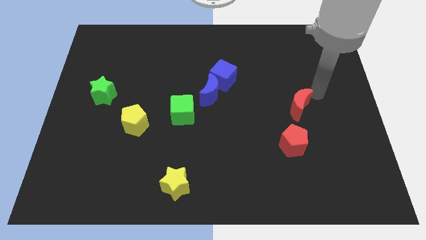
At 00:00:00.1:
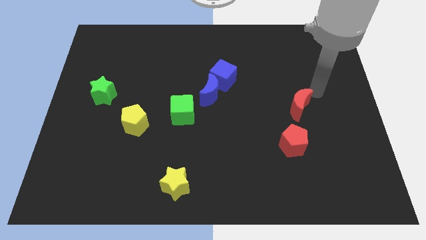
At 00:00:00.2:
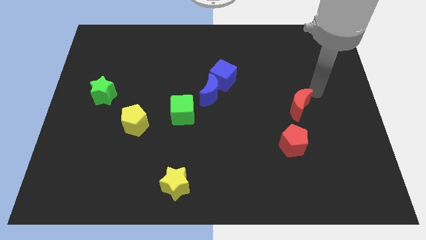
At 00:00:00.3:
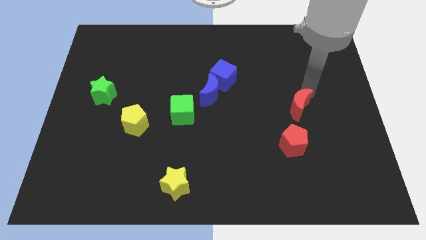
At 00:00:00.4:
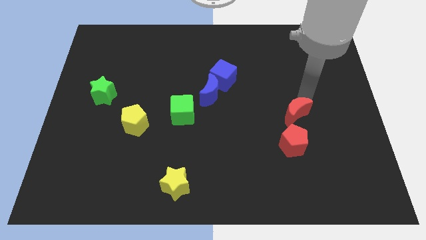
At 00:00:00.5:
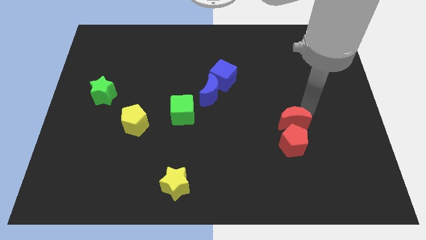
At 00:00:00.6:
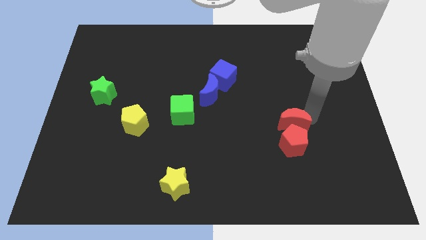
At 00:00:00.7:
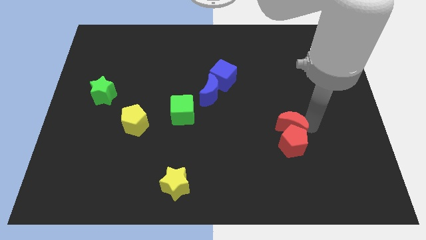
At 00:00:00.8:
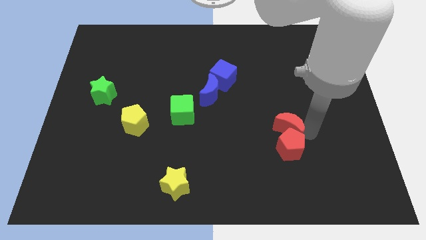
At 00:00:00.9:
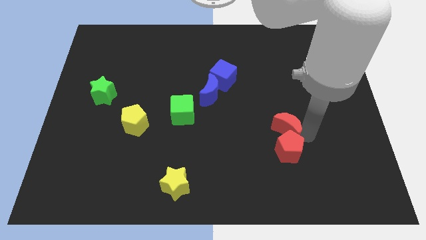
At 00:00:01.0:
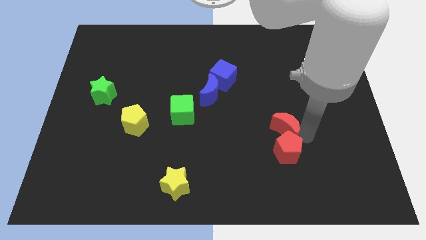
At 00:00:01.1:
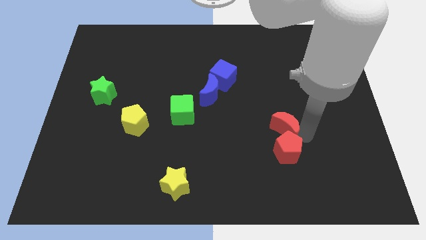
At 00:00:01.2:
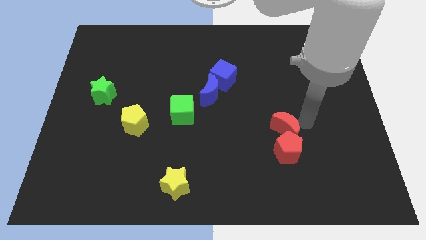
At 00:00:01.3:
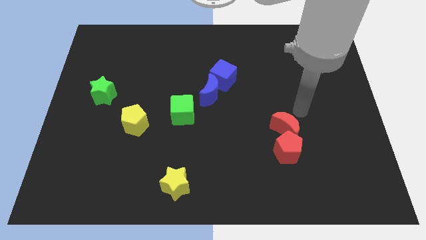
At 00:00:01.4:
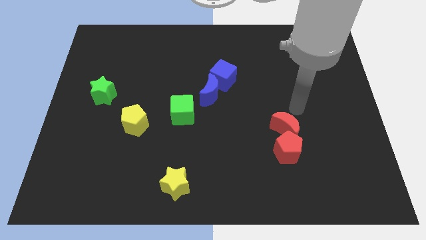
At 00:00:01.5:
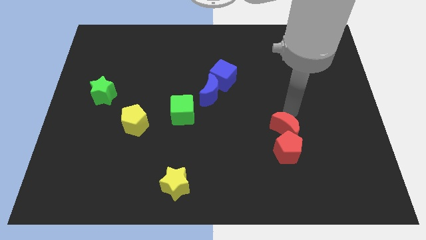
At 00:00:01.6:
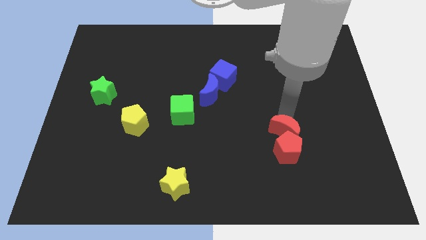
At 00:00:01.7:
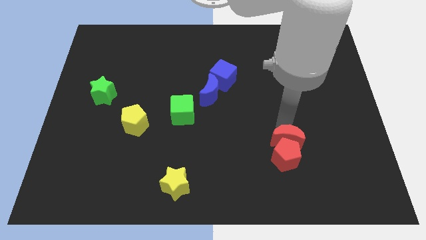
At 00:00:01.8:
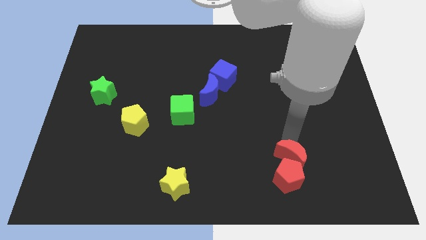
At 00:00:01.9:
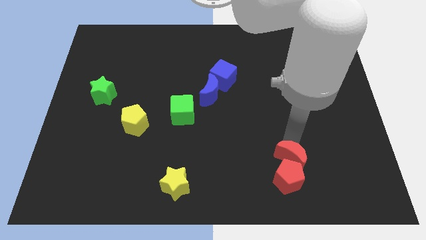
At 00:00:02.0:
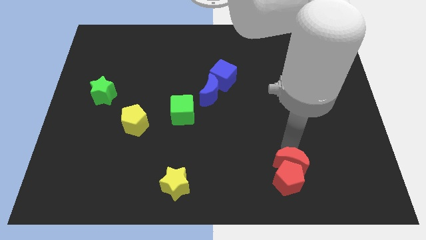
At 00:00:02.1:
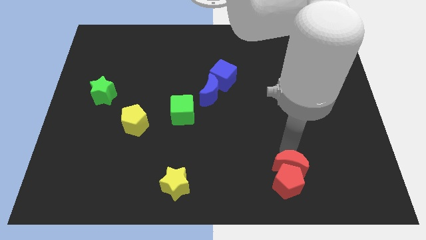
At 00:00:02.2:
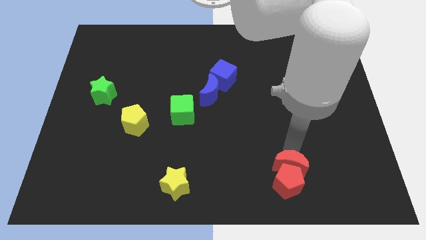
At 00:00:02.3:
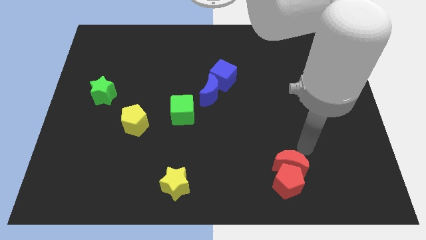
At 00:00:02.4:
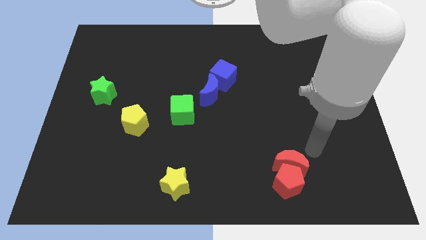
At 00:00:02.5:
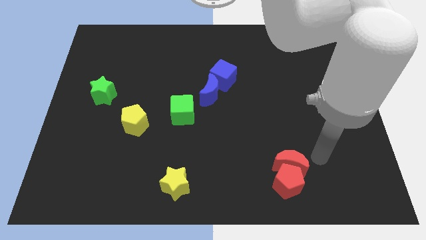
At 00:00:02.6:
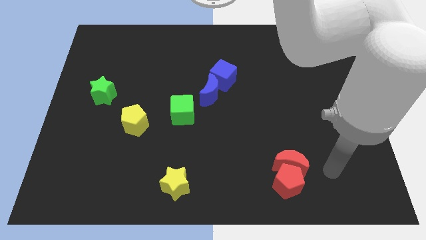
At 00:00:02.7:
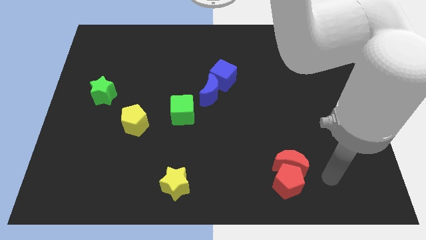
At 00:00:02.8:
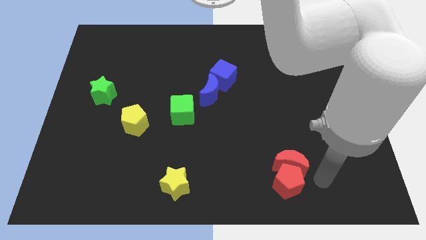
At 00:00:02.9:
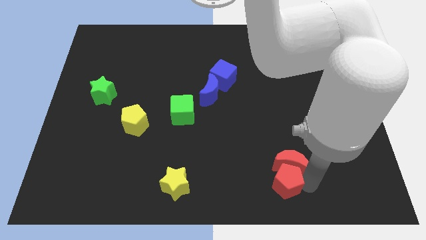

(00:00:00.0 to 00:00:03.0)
move the red blocks to the bottom

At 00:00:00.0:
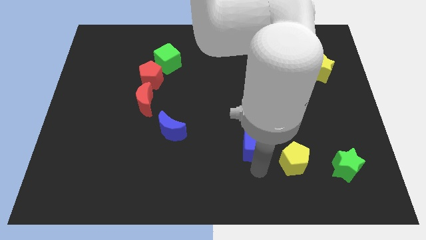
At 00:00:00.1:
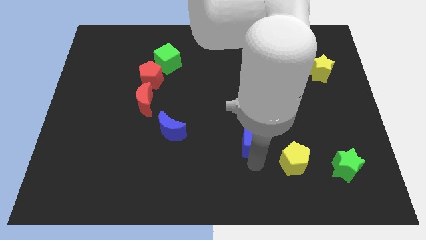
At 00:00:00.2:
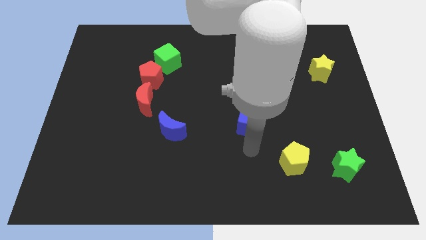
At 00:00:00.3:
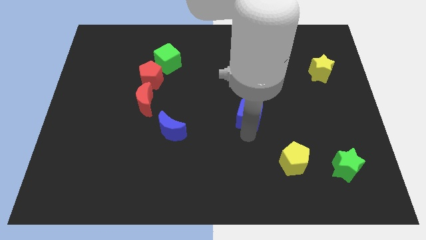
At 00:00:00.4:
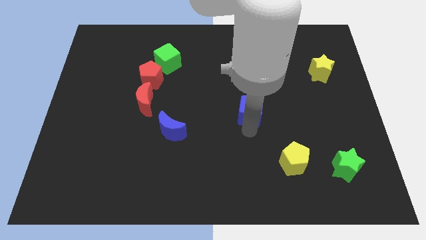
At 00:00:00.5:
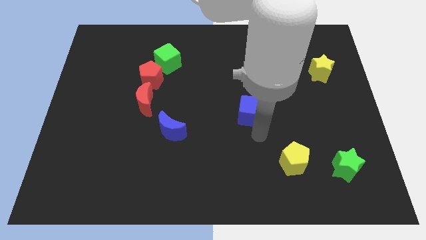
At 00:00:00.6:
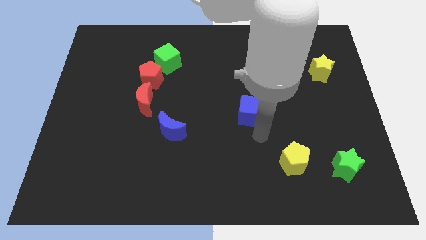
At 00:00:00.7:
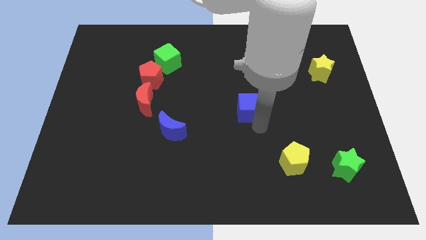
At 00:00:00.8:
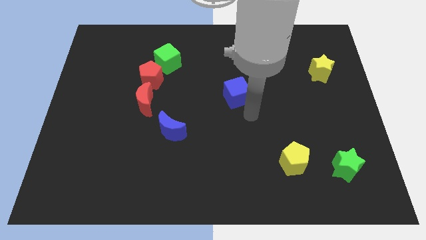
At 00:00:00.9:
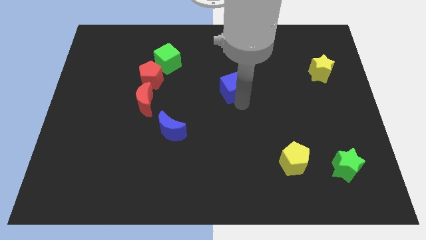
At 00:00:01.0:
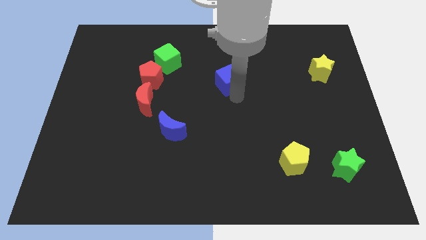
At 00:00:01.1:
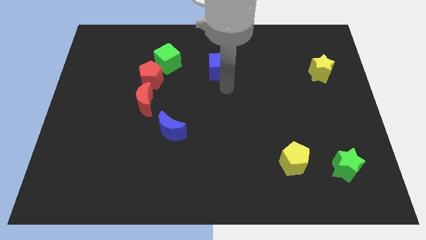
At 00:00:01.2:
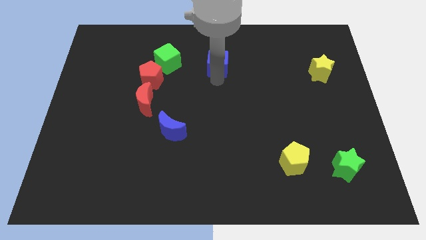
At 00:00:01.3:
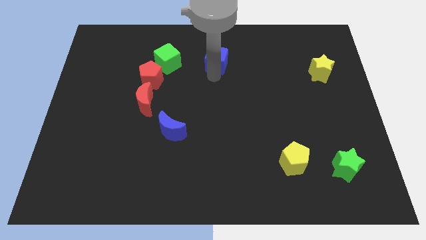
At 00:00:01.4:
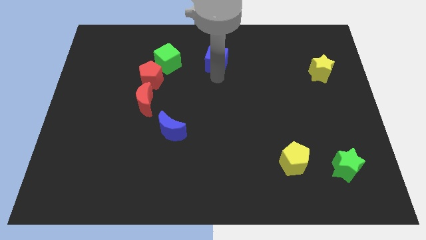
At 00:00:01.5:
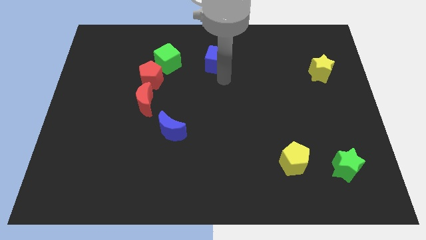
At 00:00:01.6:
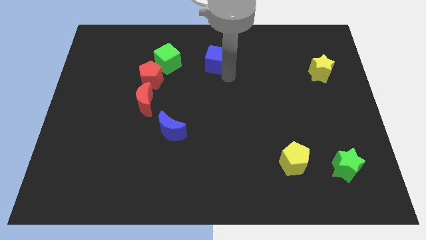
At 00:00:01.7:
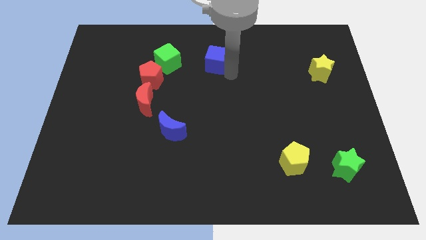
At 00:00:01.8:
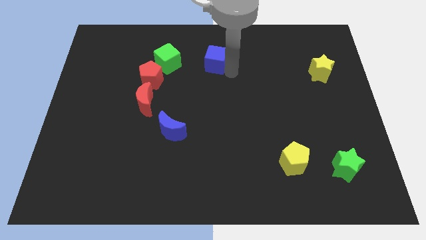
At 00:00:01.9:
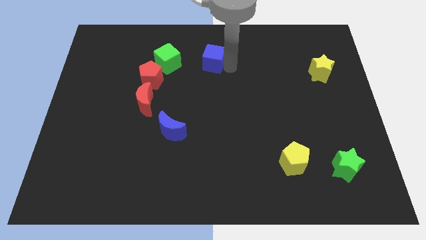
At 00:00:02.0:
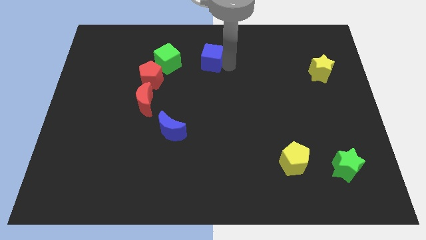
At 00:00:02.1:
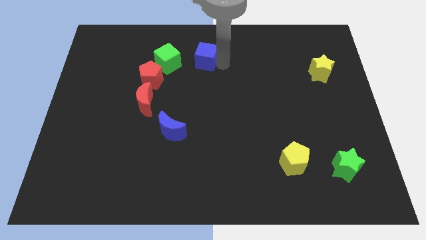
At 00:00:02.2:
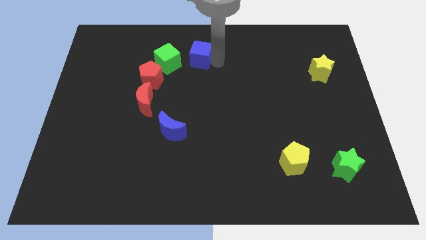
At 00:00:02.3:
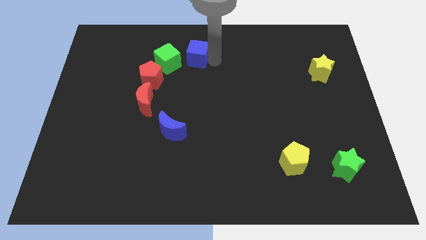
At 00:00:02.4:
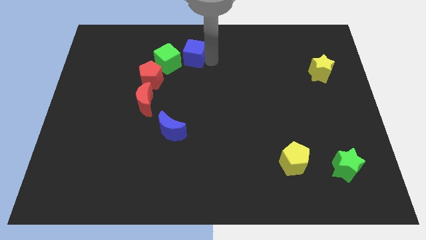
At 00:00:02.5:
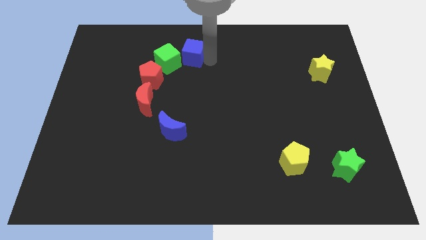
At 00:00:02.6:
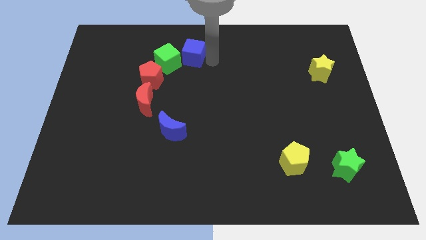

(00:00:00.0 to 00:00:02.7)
place blue cube near to green cube

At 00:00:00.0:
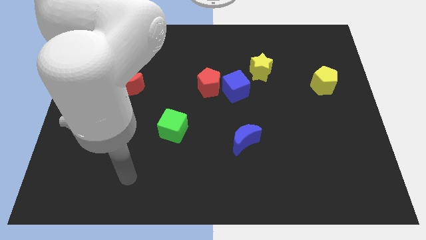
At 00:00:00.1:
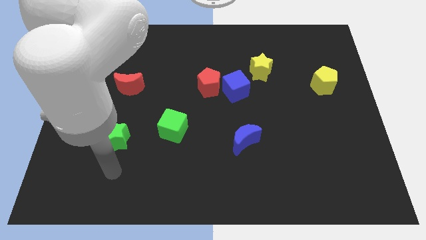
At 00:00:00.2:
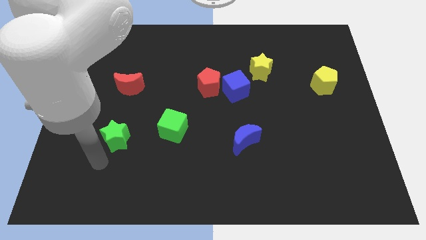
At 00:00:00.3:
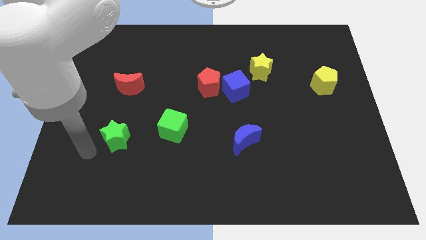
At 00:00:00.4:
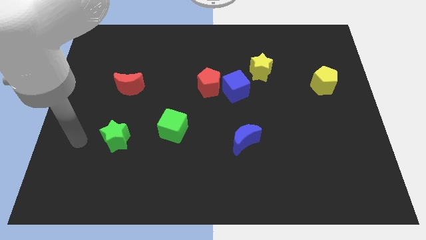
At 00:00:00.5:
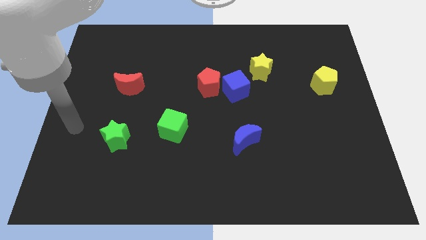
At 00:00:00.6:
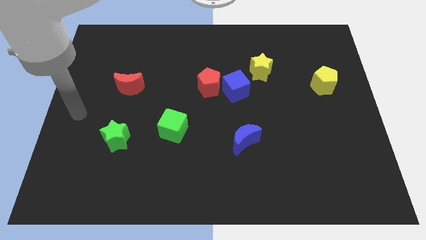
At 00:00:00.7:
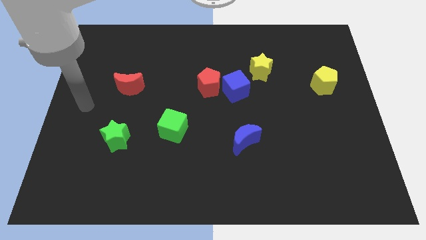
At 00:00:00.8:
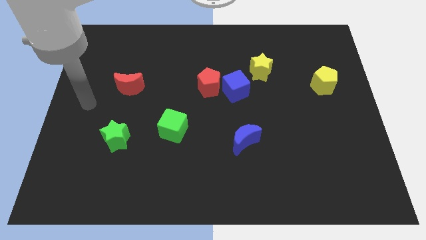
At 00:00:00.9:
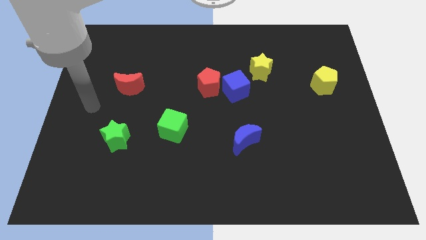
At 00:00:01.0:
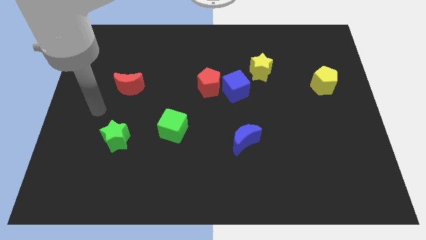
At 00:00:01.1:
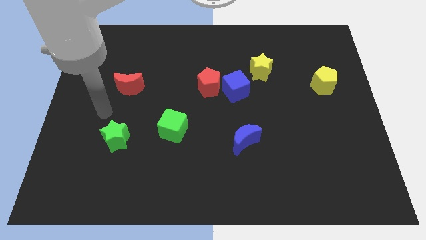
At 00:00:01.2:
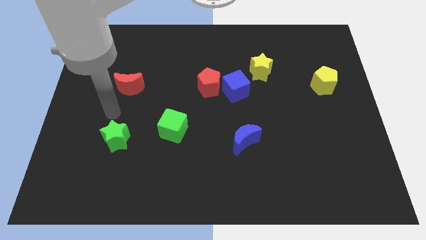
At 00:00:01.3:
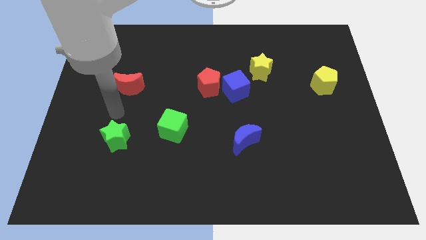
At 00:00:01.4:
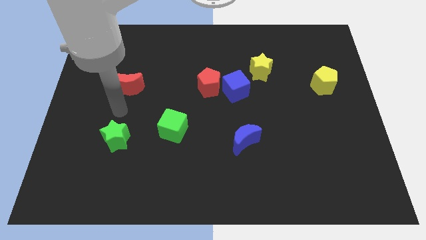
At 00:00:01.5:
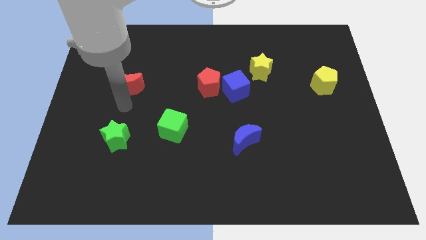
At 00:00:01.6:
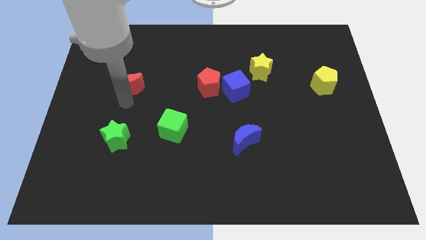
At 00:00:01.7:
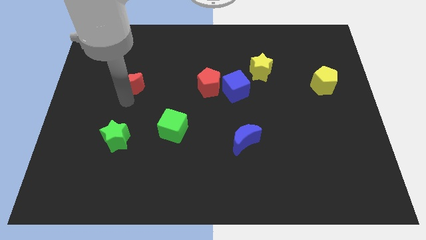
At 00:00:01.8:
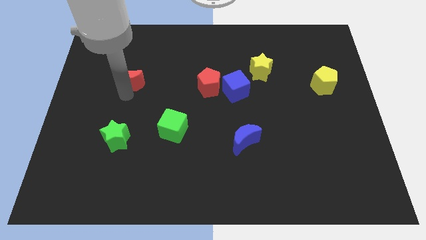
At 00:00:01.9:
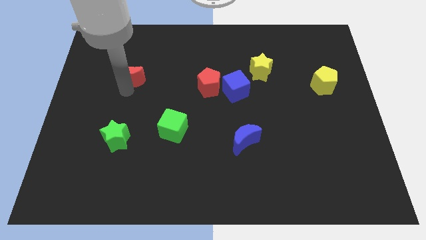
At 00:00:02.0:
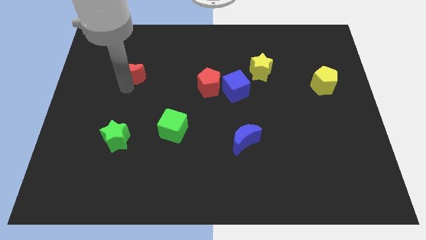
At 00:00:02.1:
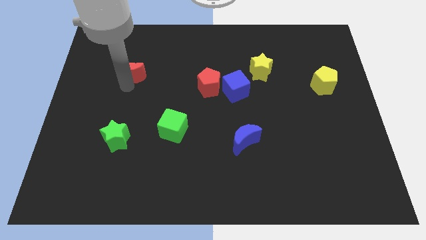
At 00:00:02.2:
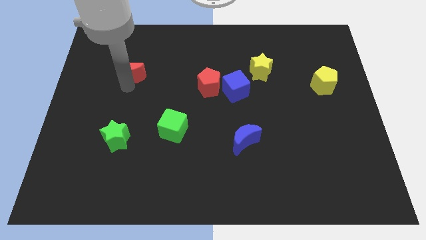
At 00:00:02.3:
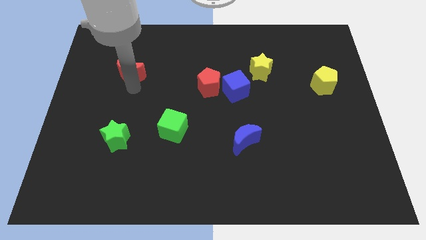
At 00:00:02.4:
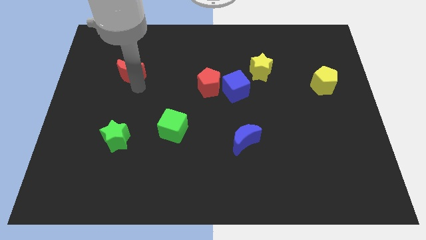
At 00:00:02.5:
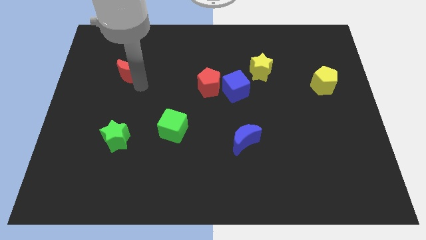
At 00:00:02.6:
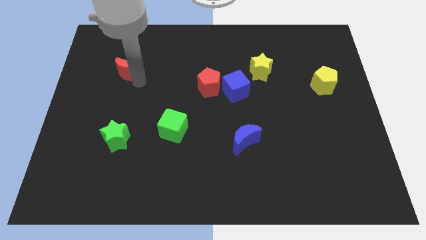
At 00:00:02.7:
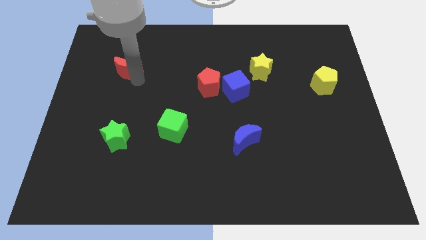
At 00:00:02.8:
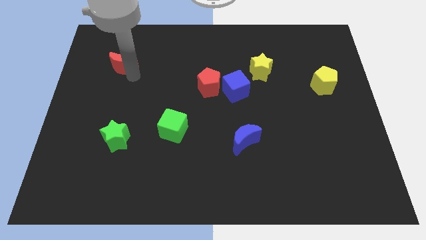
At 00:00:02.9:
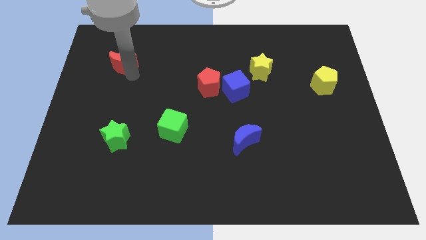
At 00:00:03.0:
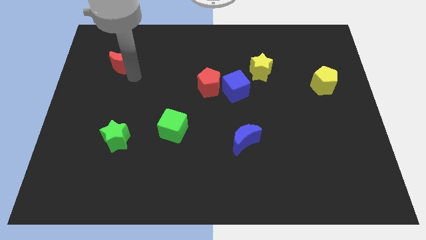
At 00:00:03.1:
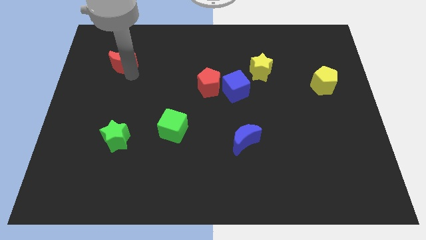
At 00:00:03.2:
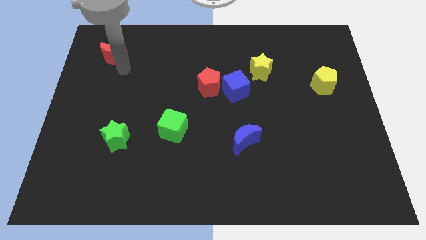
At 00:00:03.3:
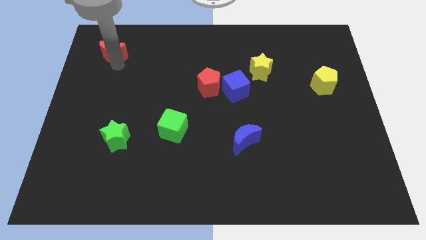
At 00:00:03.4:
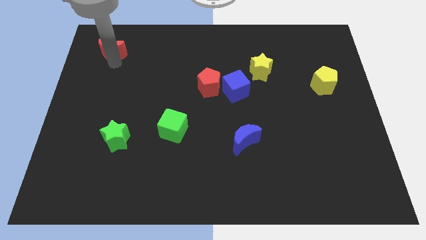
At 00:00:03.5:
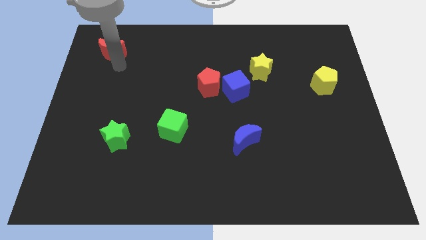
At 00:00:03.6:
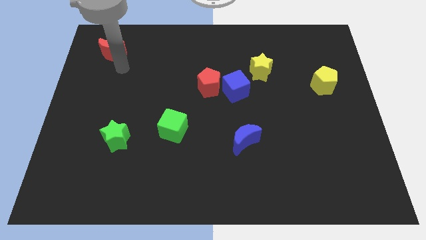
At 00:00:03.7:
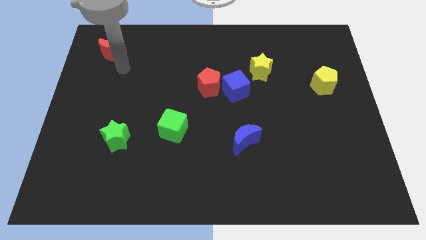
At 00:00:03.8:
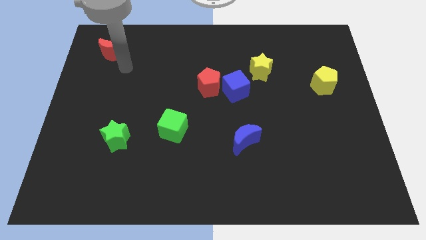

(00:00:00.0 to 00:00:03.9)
push the red crescent to the top left of the red pentagon
